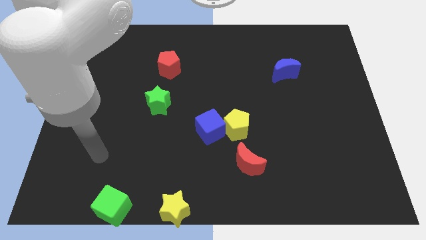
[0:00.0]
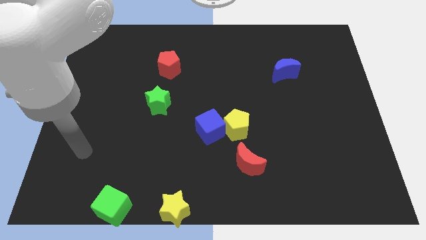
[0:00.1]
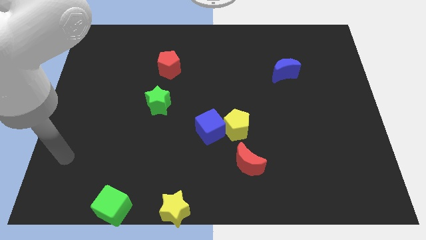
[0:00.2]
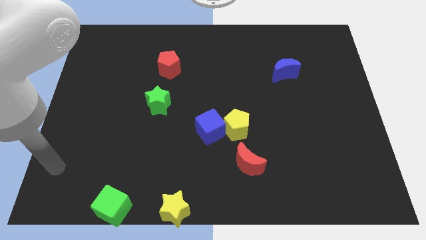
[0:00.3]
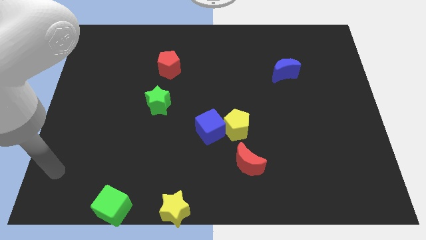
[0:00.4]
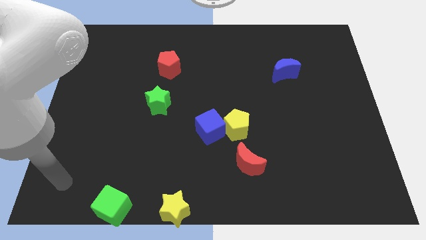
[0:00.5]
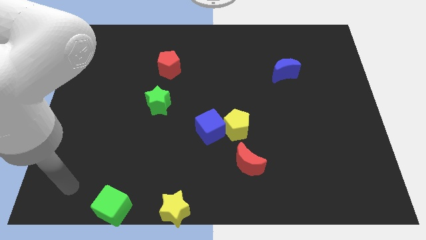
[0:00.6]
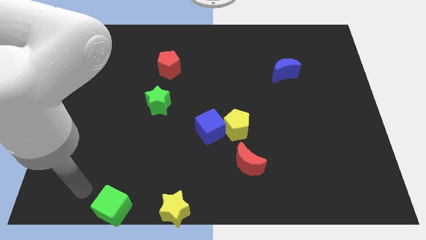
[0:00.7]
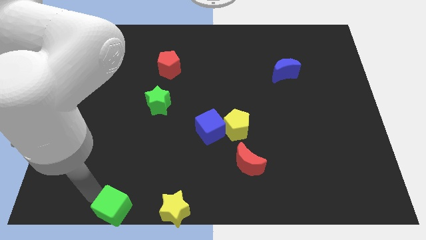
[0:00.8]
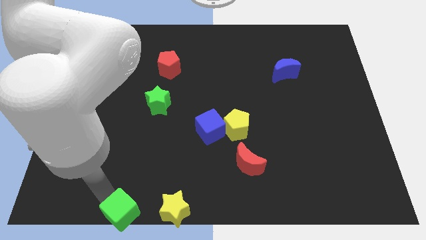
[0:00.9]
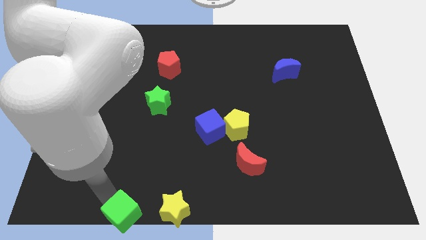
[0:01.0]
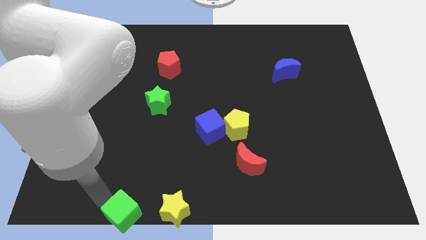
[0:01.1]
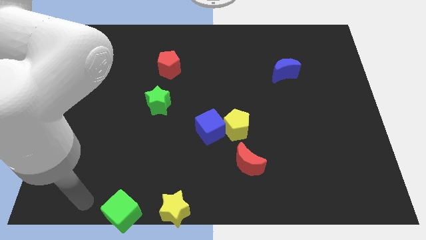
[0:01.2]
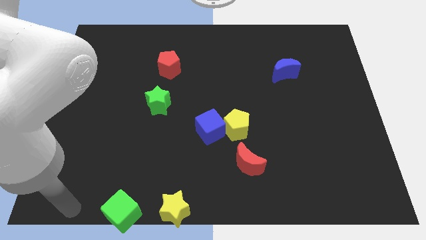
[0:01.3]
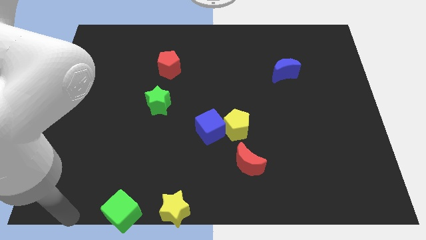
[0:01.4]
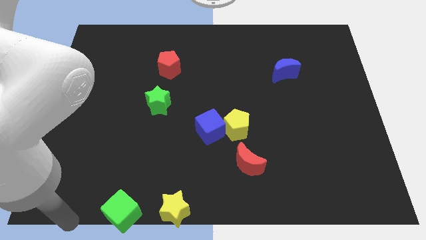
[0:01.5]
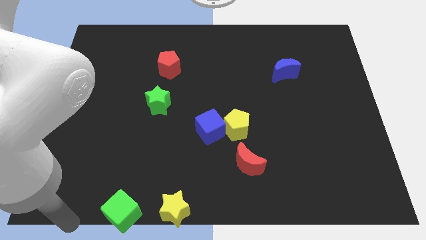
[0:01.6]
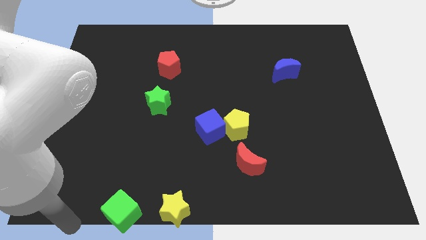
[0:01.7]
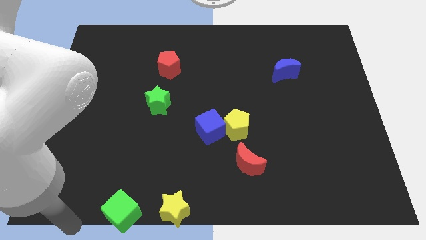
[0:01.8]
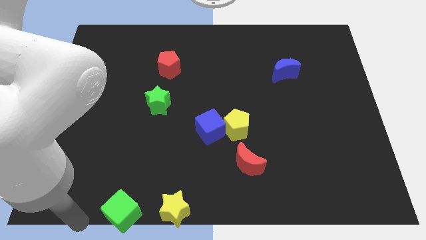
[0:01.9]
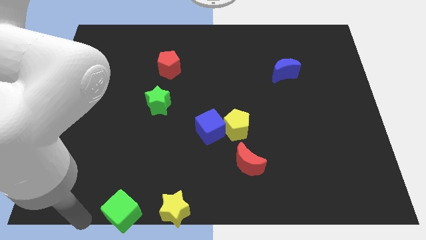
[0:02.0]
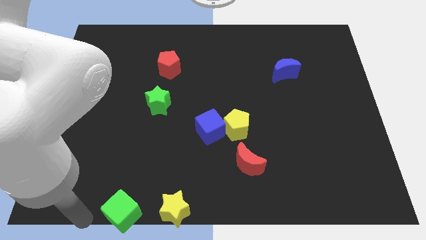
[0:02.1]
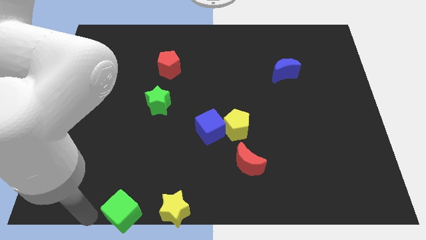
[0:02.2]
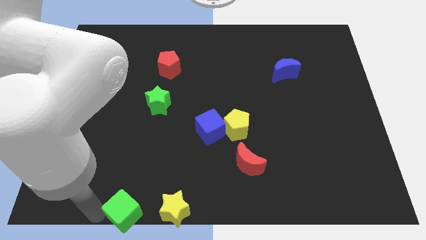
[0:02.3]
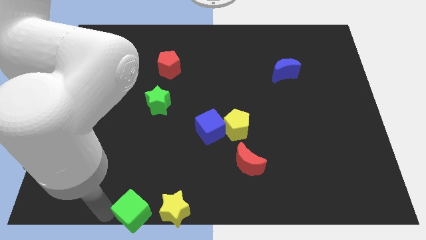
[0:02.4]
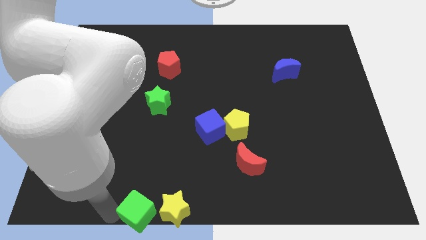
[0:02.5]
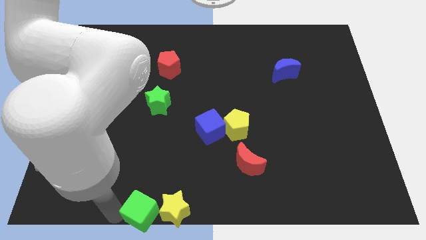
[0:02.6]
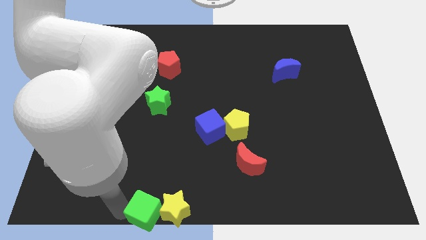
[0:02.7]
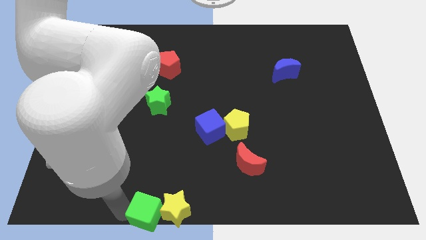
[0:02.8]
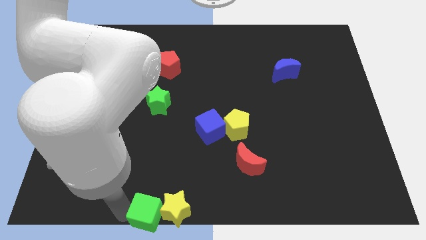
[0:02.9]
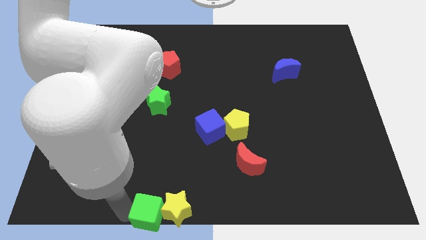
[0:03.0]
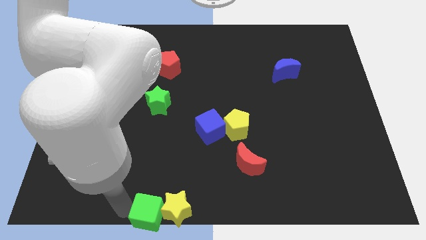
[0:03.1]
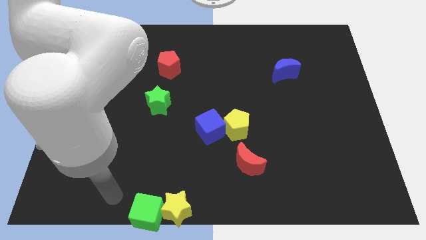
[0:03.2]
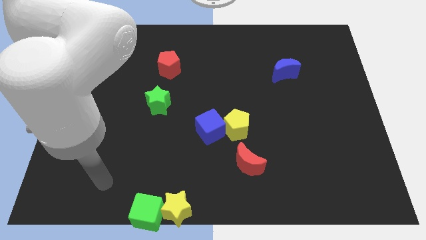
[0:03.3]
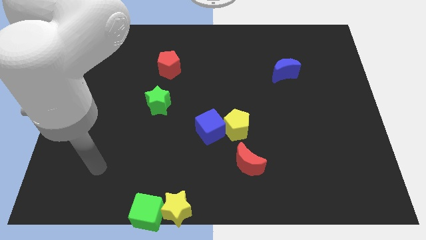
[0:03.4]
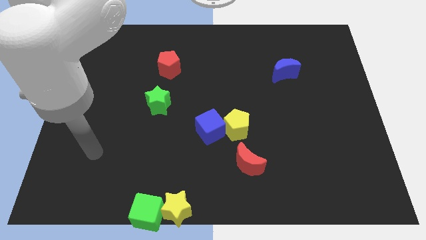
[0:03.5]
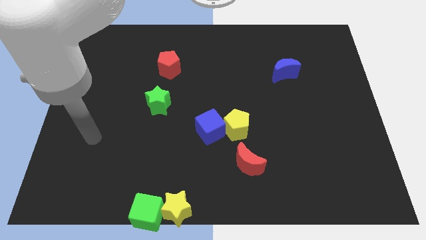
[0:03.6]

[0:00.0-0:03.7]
push the green cube into the yellow star towards the bottom center

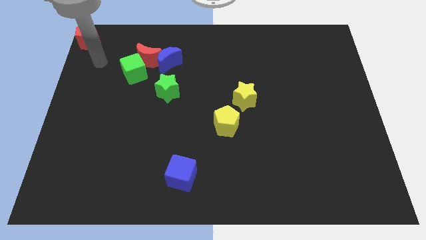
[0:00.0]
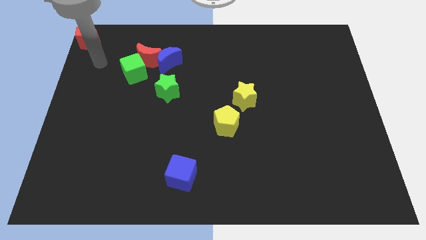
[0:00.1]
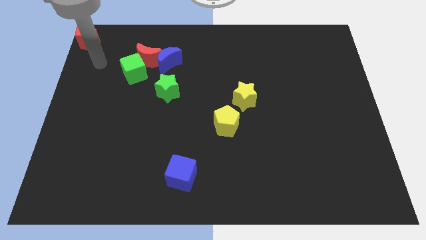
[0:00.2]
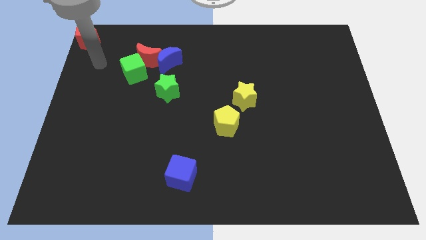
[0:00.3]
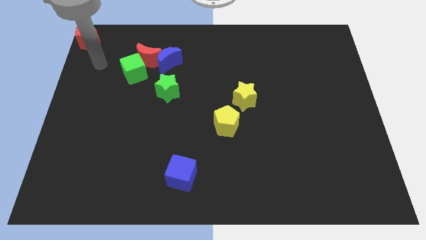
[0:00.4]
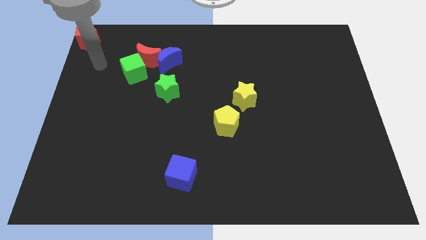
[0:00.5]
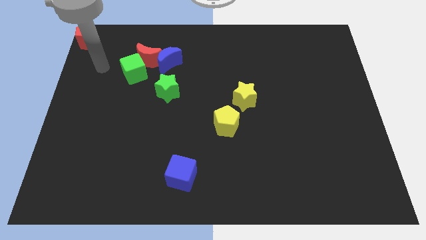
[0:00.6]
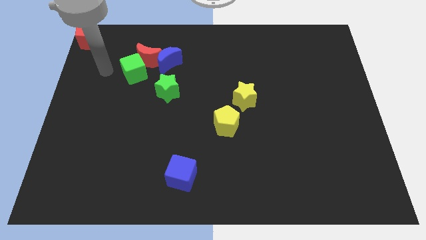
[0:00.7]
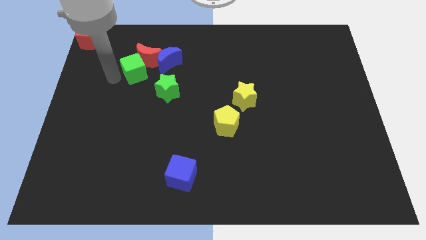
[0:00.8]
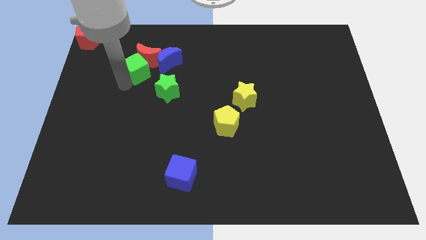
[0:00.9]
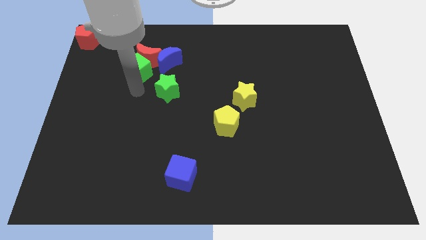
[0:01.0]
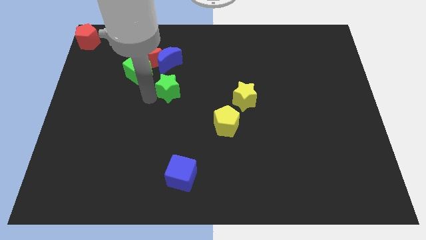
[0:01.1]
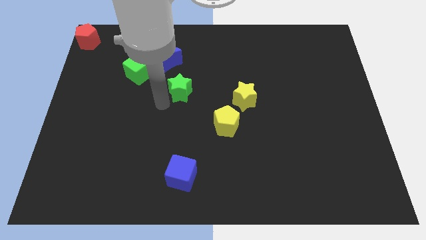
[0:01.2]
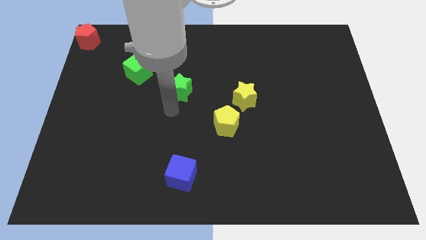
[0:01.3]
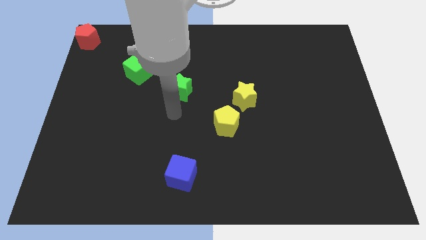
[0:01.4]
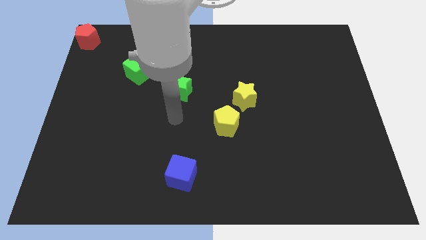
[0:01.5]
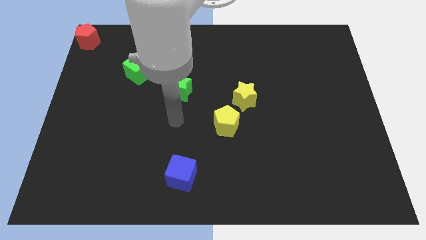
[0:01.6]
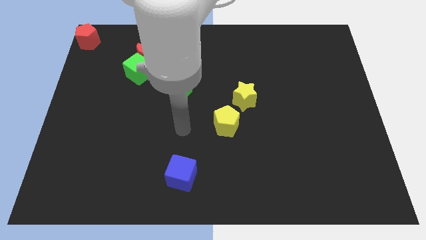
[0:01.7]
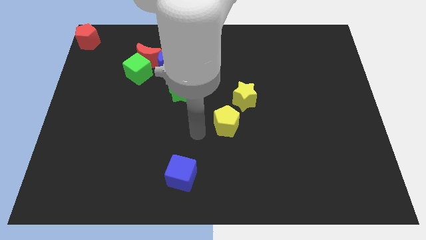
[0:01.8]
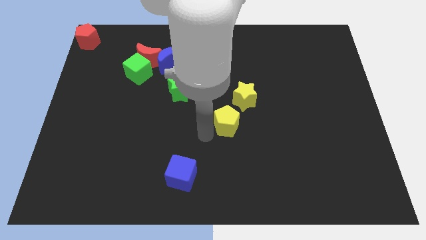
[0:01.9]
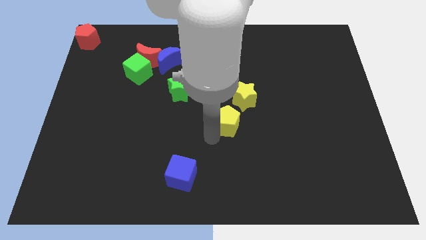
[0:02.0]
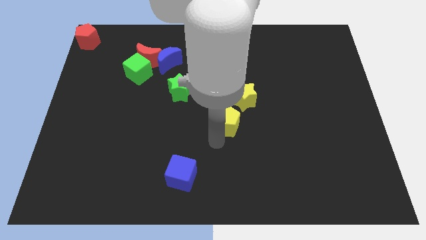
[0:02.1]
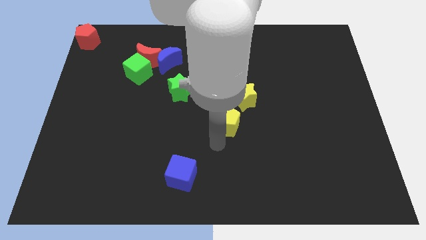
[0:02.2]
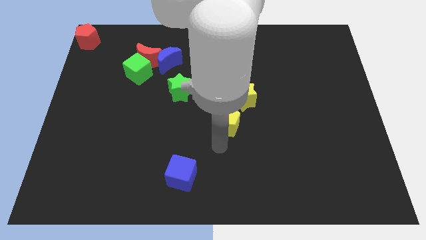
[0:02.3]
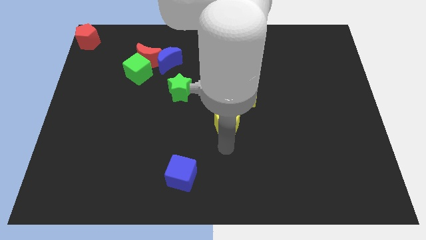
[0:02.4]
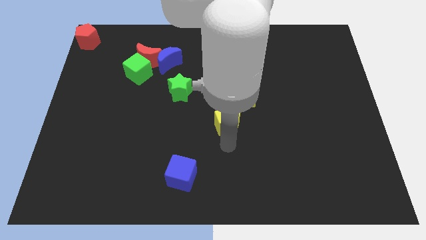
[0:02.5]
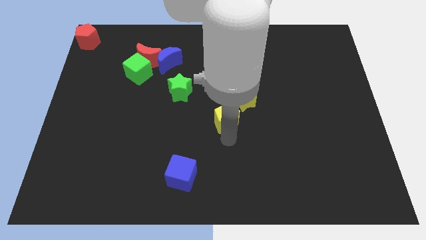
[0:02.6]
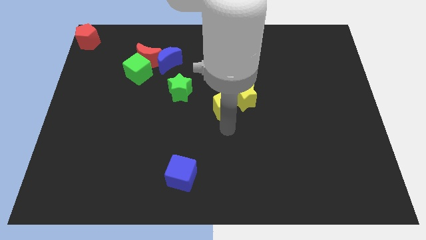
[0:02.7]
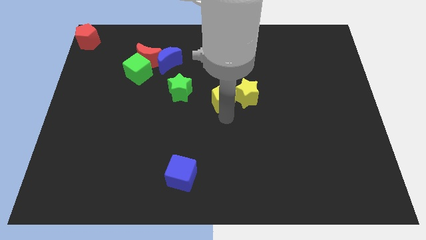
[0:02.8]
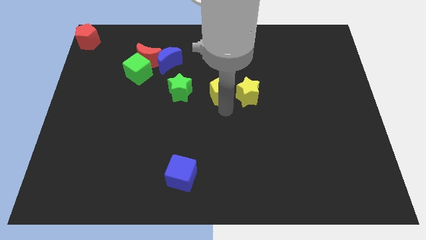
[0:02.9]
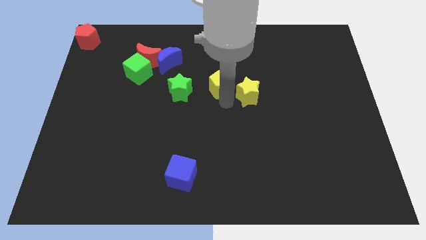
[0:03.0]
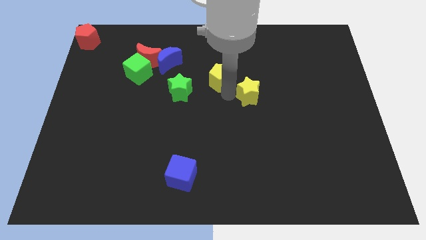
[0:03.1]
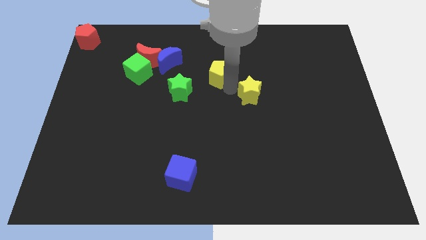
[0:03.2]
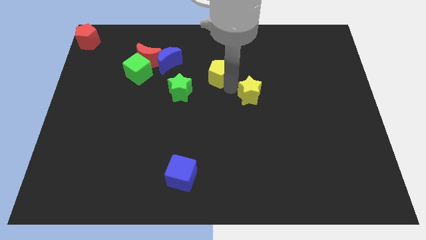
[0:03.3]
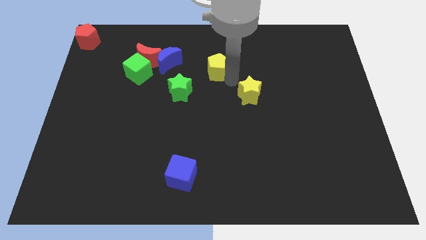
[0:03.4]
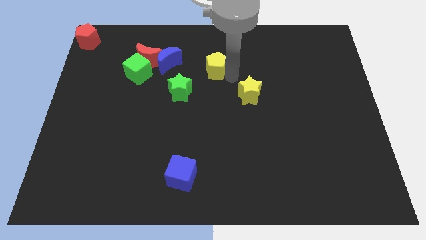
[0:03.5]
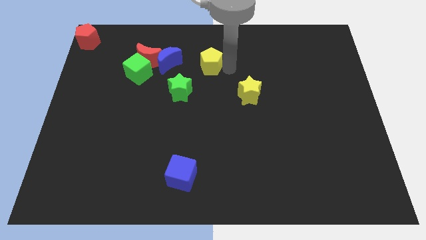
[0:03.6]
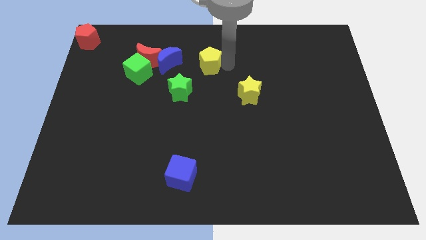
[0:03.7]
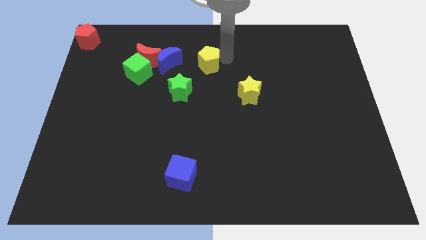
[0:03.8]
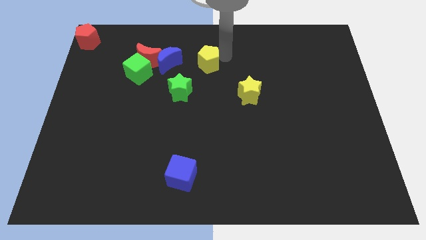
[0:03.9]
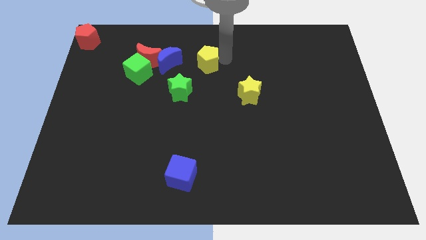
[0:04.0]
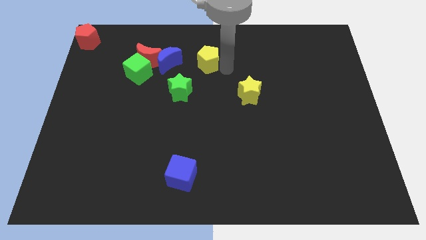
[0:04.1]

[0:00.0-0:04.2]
place the yellow pentagon to the right of the blue moon

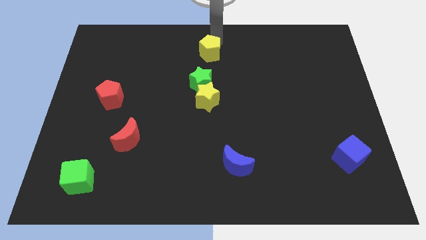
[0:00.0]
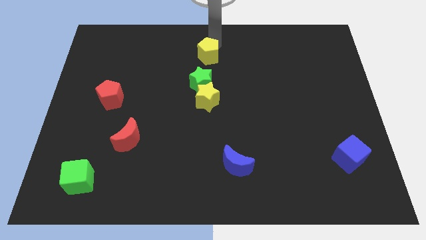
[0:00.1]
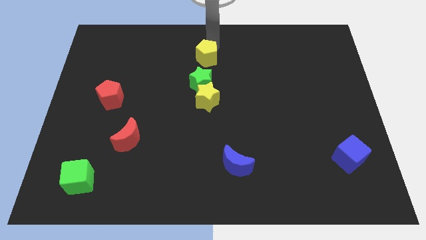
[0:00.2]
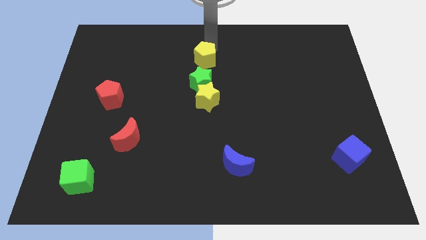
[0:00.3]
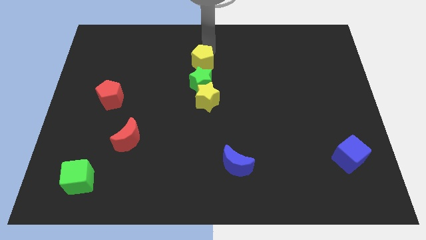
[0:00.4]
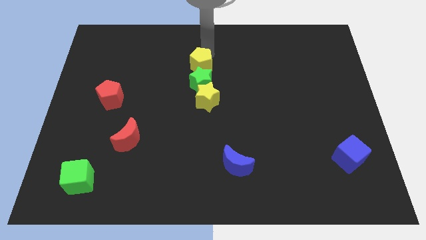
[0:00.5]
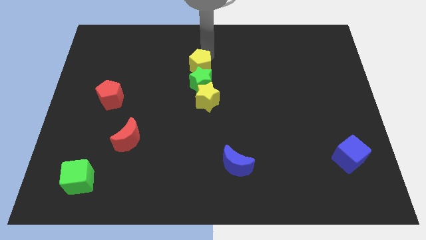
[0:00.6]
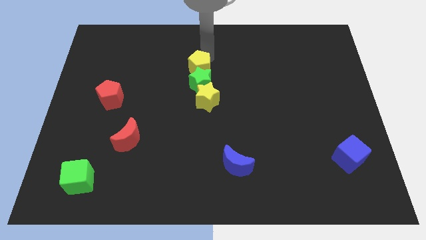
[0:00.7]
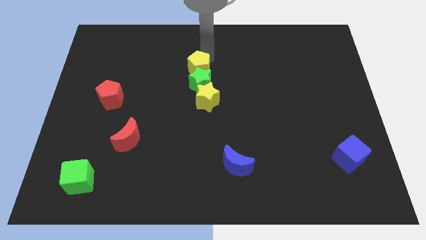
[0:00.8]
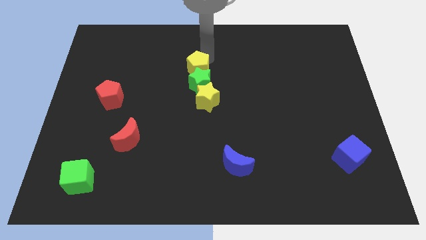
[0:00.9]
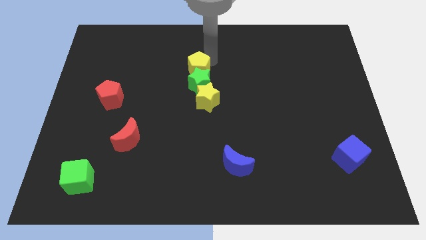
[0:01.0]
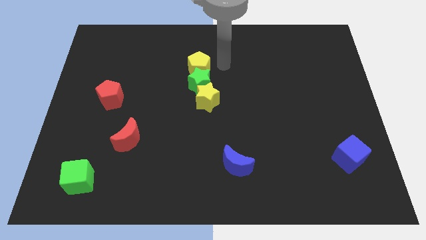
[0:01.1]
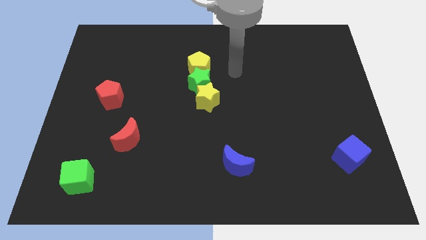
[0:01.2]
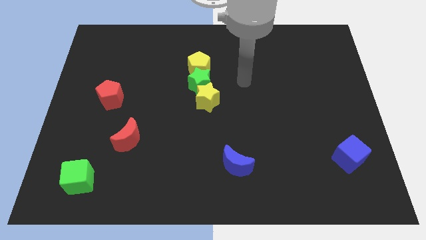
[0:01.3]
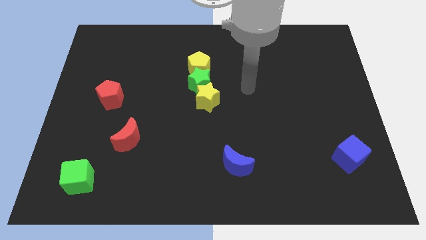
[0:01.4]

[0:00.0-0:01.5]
adjust the yellow pentagon towards top center of the board
